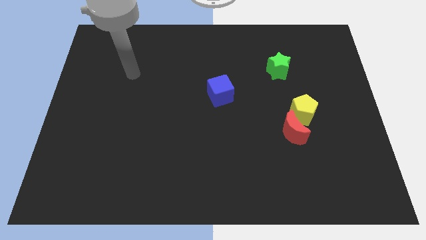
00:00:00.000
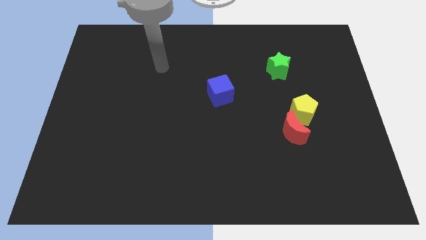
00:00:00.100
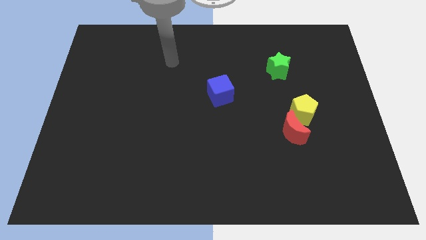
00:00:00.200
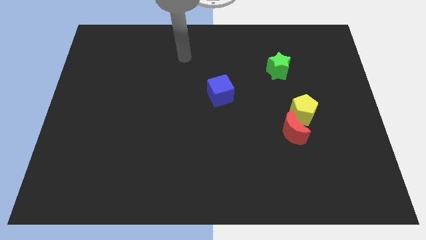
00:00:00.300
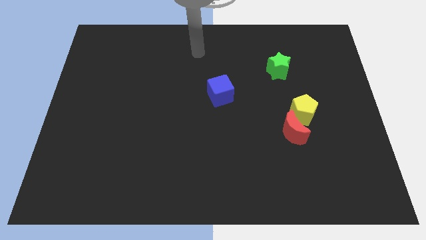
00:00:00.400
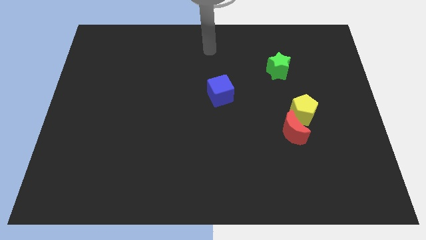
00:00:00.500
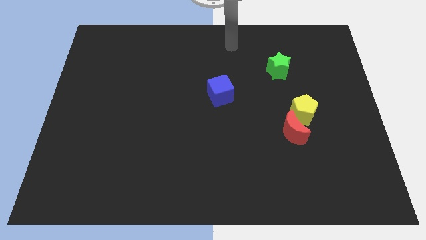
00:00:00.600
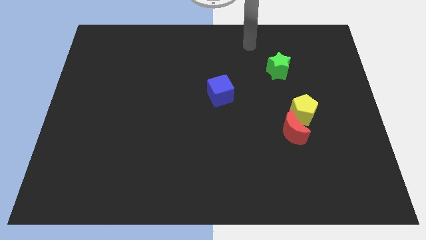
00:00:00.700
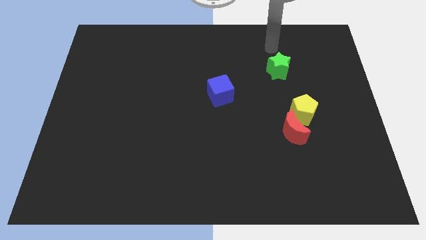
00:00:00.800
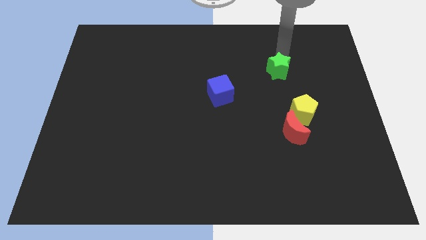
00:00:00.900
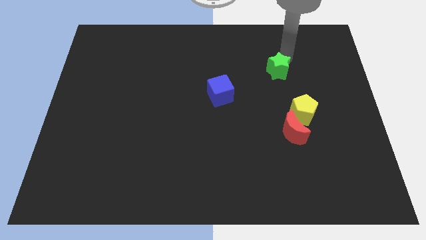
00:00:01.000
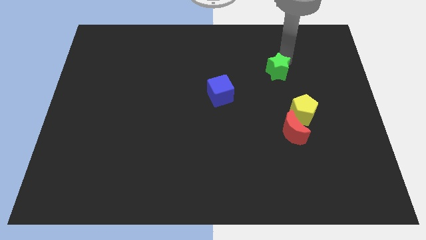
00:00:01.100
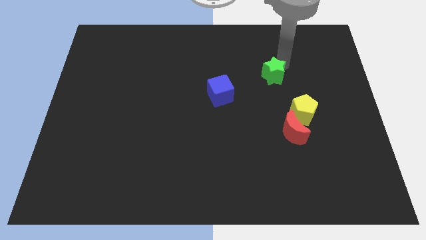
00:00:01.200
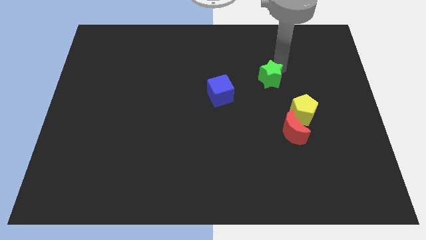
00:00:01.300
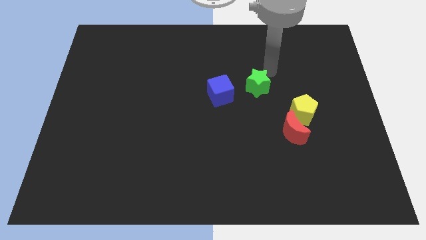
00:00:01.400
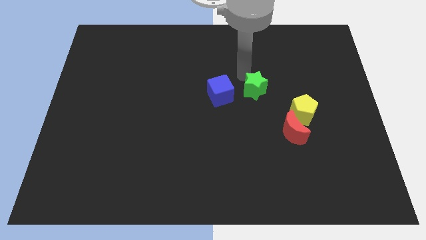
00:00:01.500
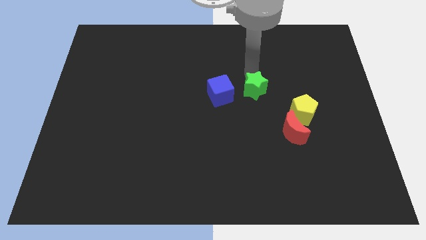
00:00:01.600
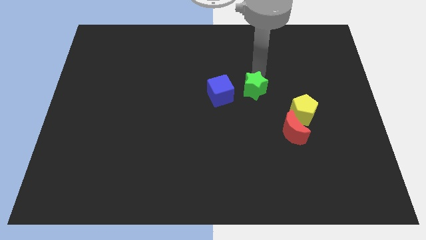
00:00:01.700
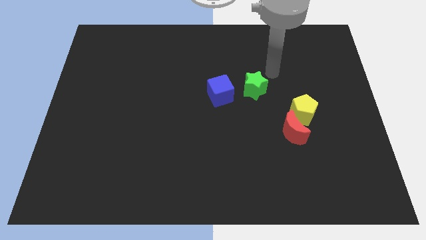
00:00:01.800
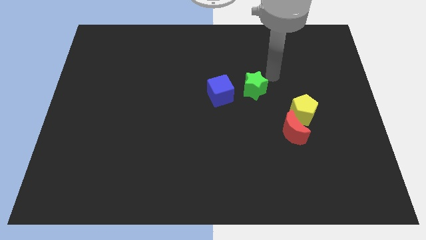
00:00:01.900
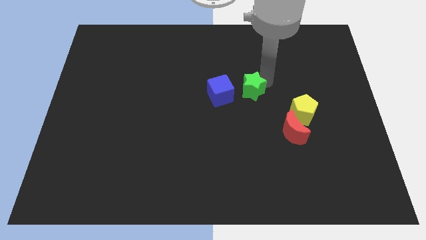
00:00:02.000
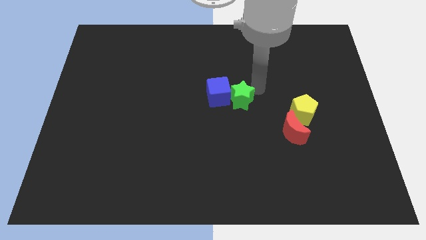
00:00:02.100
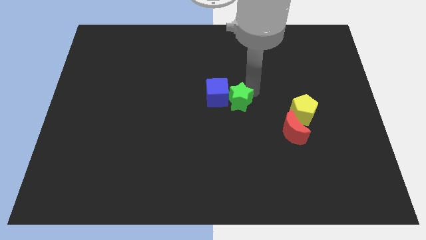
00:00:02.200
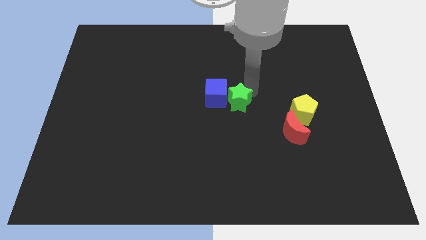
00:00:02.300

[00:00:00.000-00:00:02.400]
push the green block next to the blue block

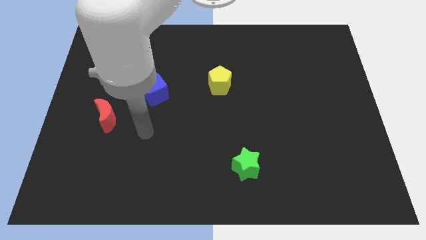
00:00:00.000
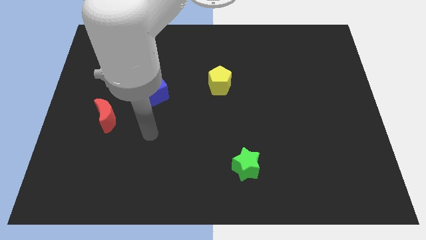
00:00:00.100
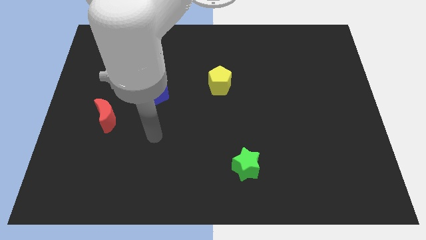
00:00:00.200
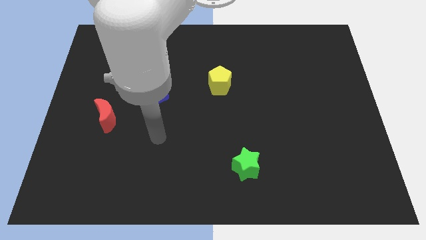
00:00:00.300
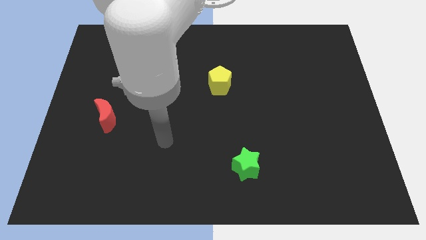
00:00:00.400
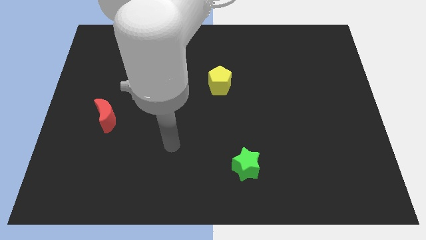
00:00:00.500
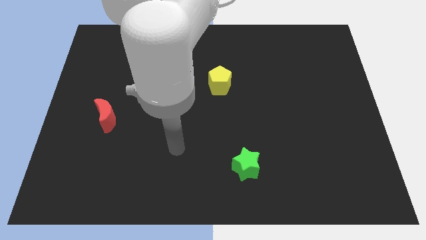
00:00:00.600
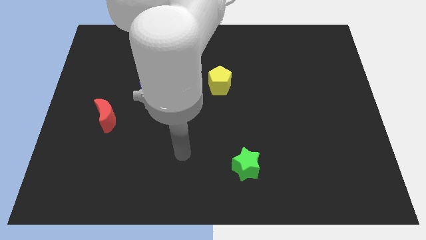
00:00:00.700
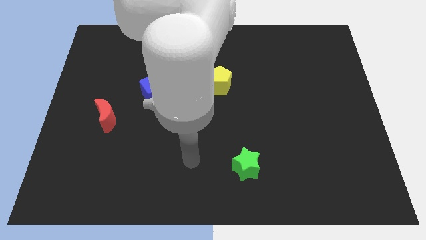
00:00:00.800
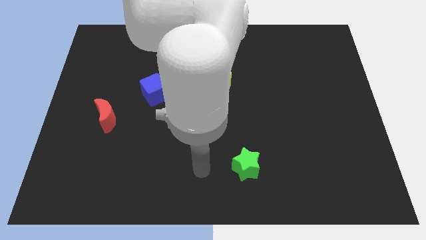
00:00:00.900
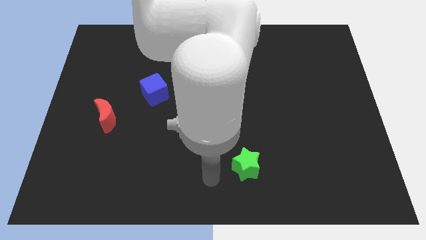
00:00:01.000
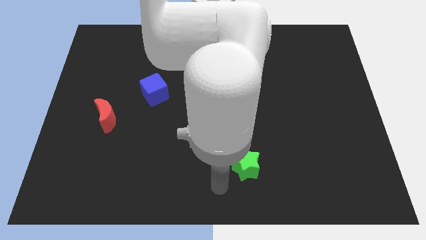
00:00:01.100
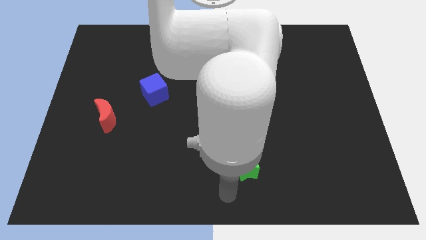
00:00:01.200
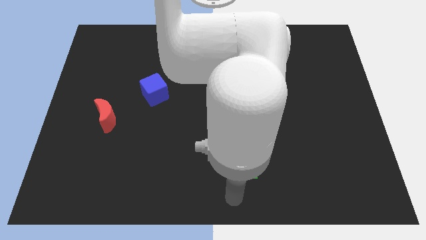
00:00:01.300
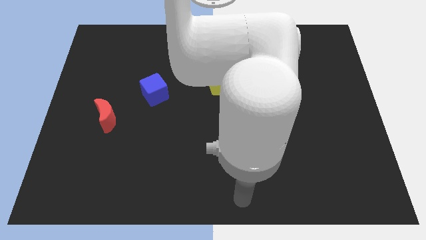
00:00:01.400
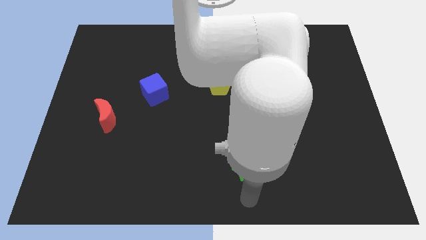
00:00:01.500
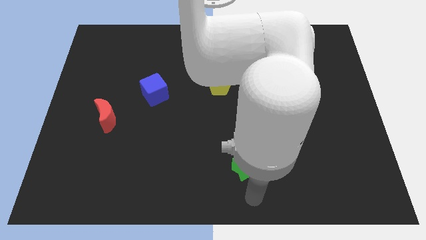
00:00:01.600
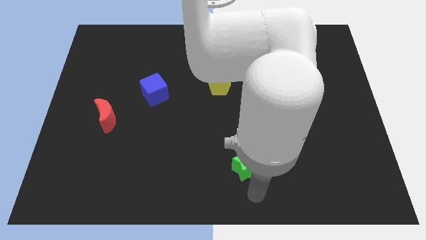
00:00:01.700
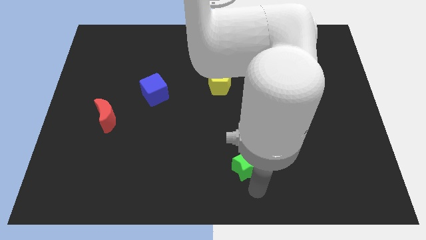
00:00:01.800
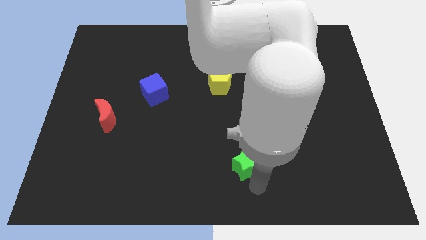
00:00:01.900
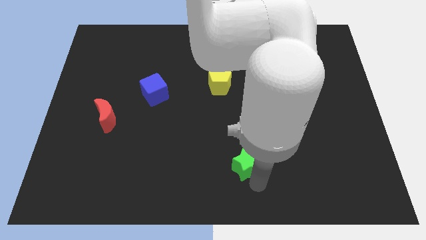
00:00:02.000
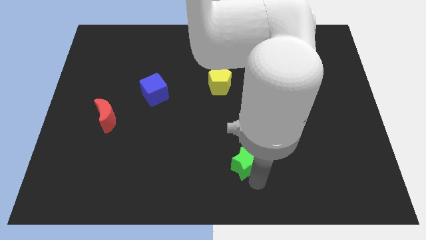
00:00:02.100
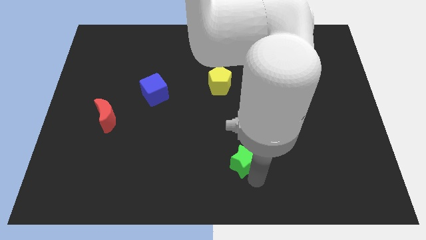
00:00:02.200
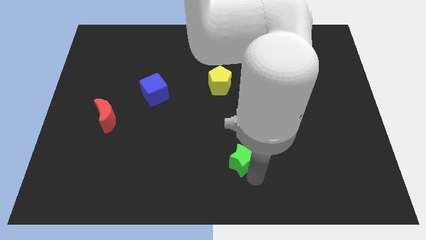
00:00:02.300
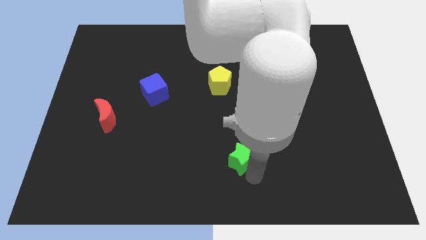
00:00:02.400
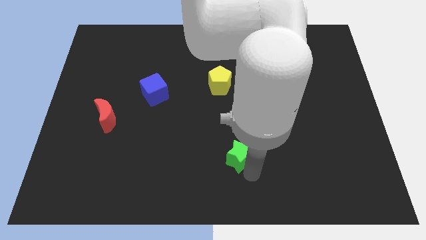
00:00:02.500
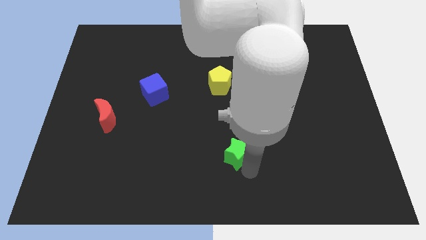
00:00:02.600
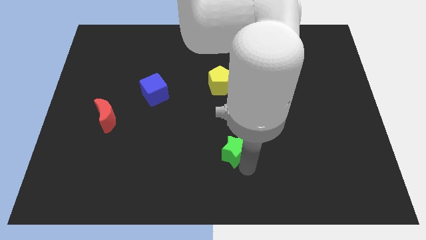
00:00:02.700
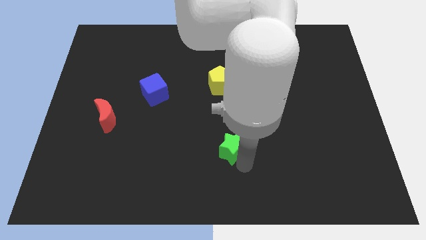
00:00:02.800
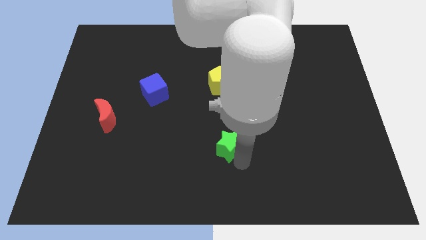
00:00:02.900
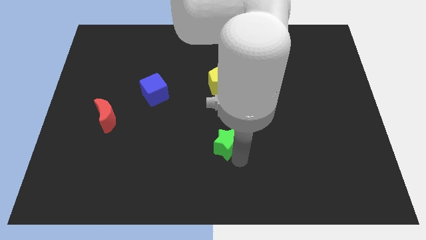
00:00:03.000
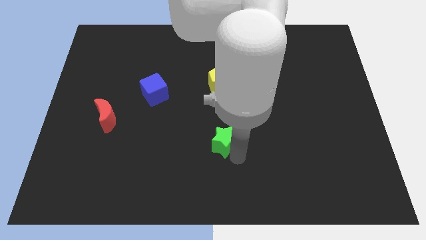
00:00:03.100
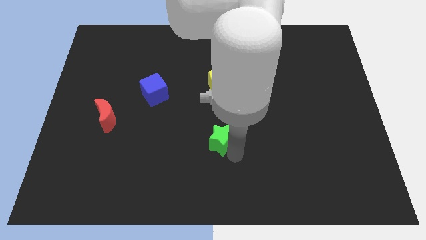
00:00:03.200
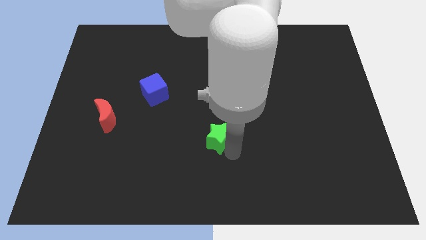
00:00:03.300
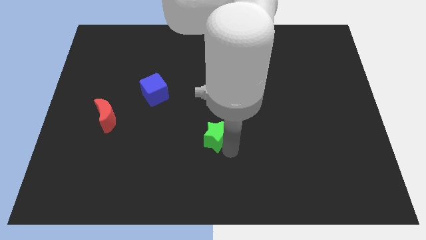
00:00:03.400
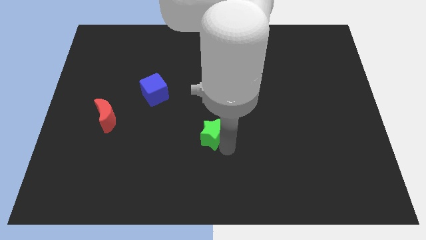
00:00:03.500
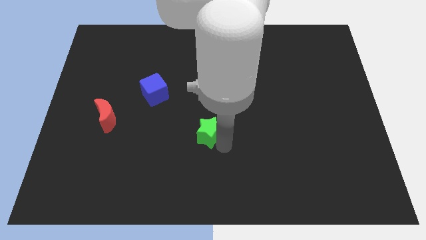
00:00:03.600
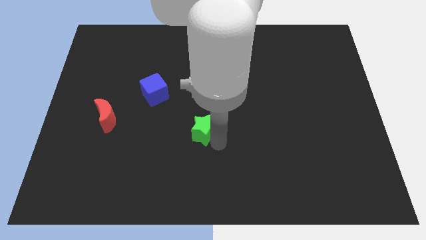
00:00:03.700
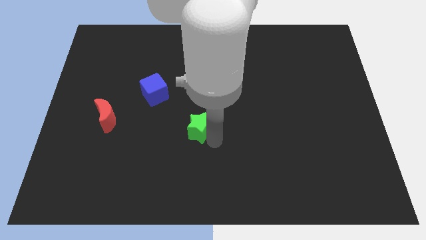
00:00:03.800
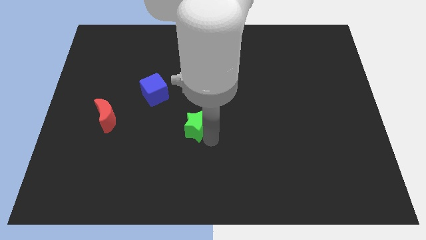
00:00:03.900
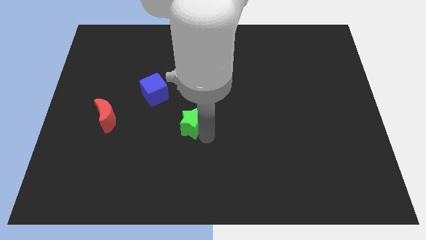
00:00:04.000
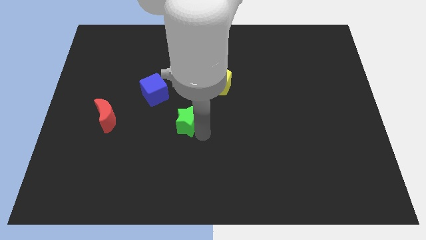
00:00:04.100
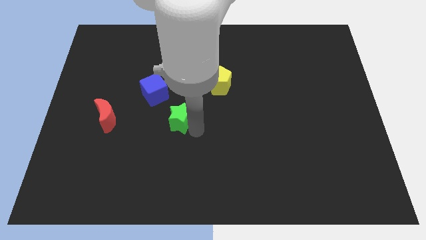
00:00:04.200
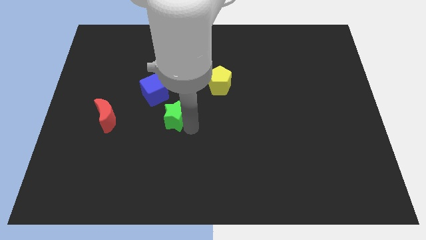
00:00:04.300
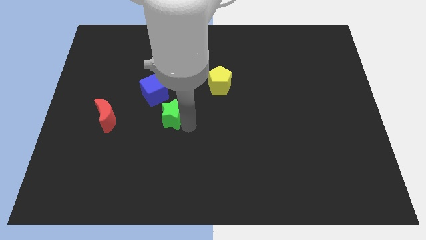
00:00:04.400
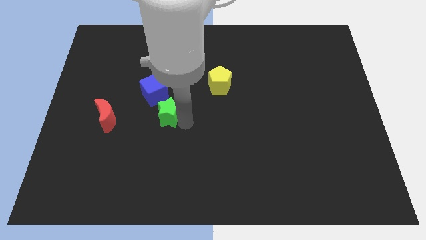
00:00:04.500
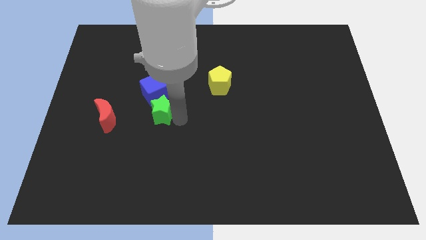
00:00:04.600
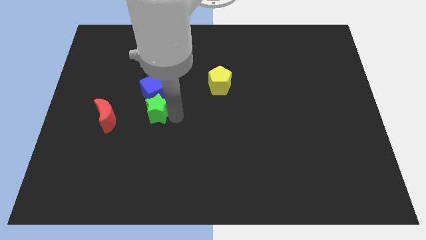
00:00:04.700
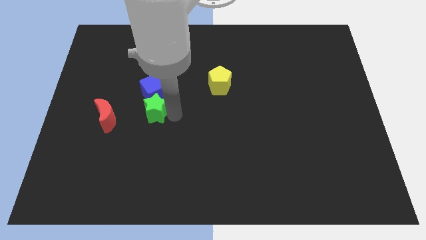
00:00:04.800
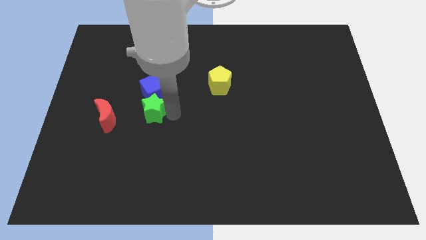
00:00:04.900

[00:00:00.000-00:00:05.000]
move the star next to the blue block

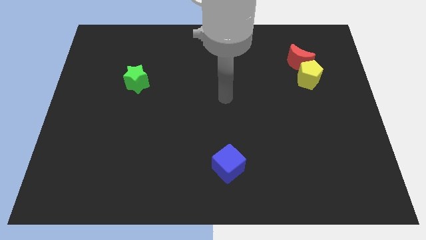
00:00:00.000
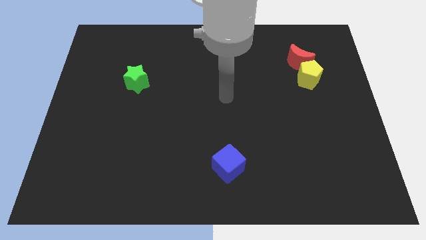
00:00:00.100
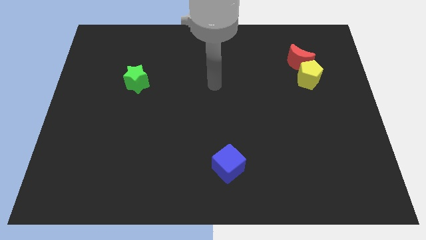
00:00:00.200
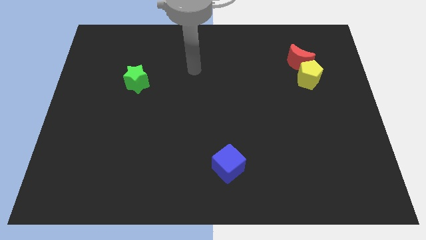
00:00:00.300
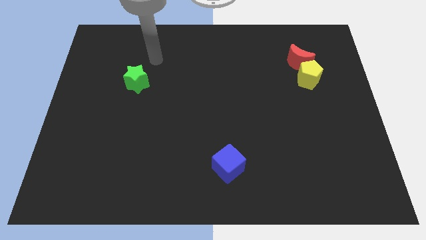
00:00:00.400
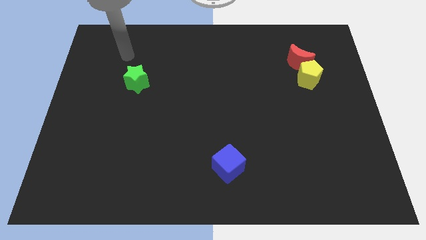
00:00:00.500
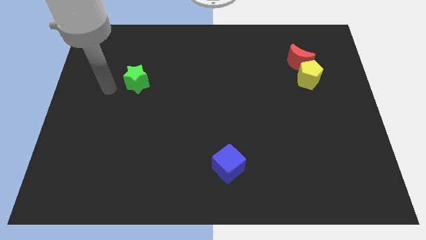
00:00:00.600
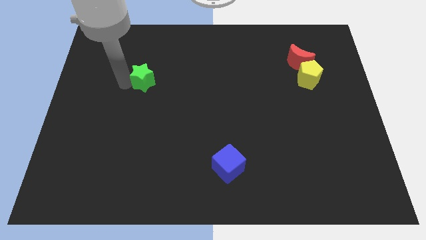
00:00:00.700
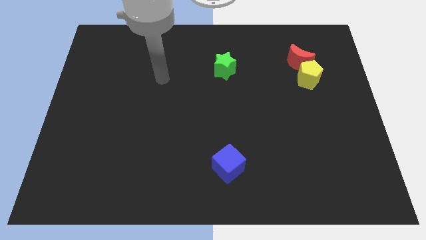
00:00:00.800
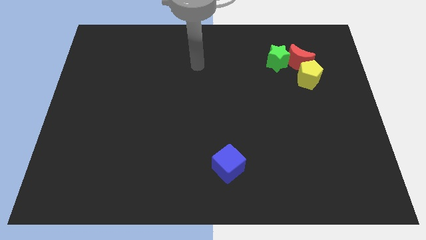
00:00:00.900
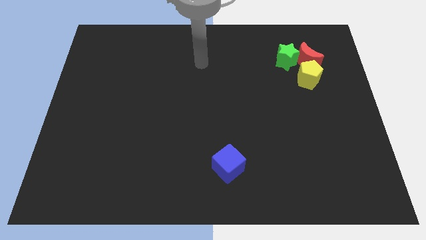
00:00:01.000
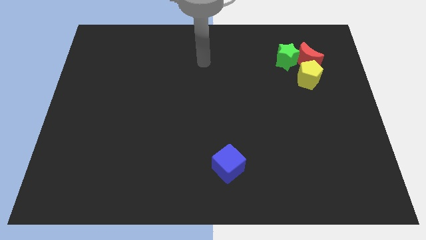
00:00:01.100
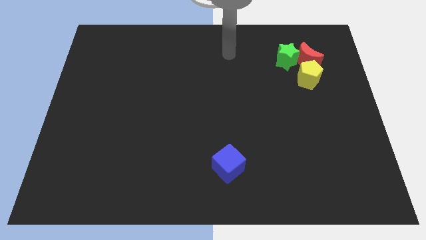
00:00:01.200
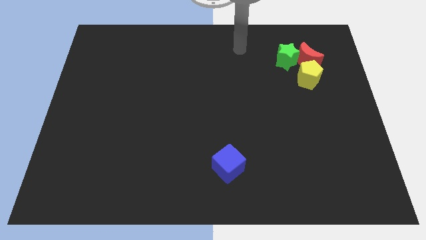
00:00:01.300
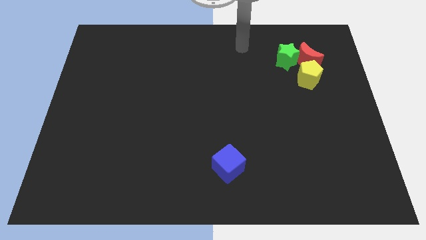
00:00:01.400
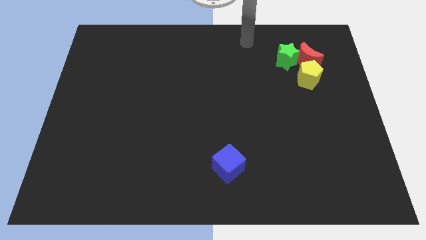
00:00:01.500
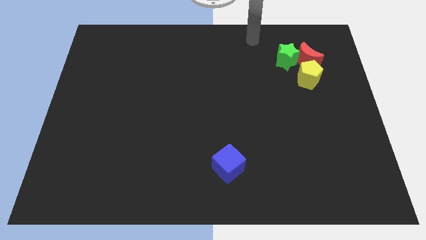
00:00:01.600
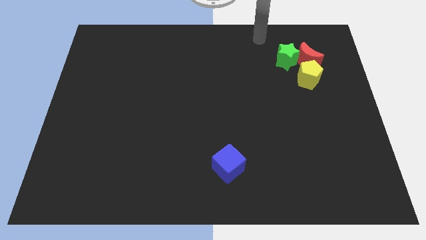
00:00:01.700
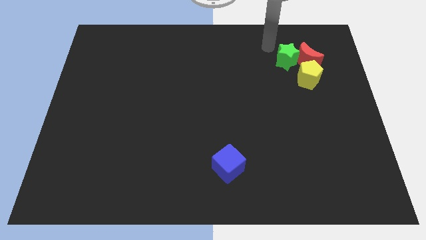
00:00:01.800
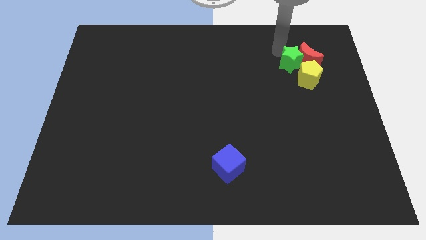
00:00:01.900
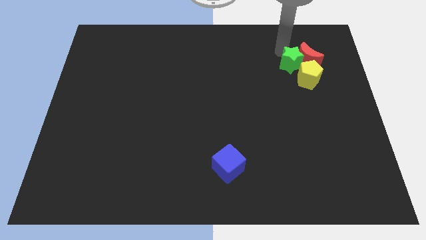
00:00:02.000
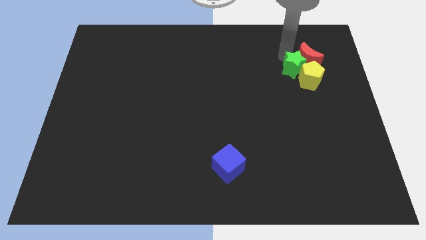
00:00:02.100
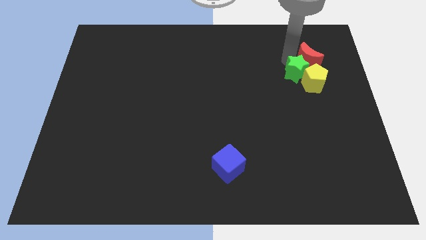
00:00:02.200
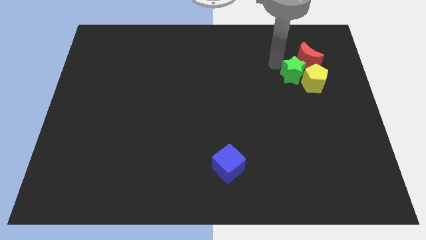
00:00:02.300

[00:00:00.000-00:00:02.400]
put the star next to the pentagon
